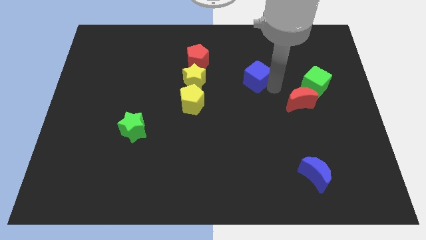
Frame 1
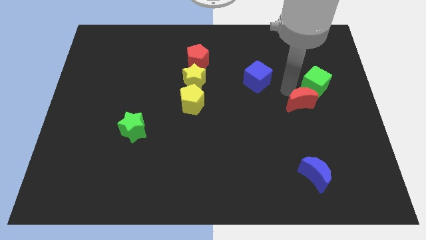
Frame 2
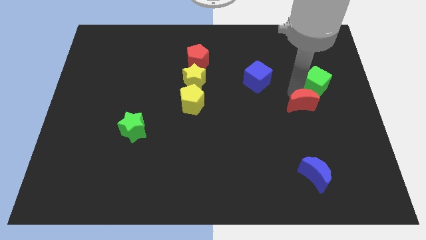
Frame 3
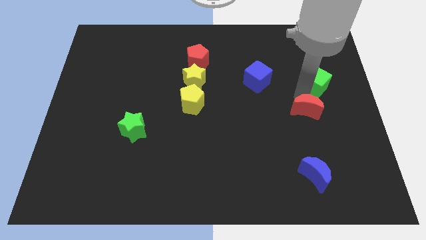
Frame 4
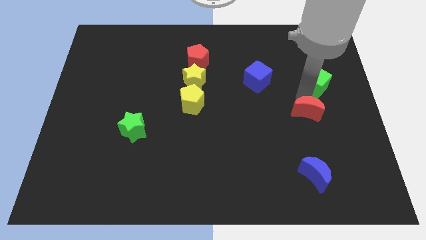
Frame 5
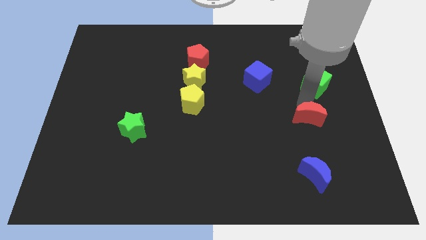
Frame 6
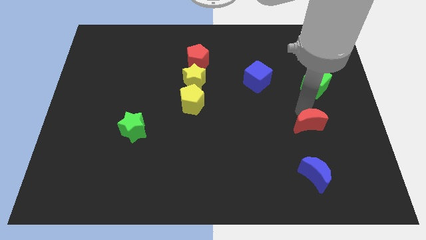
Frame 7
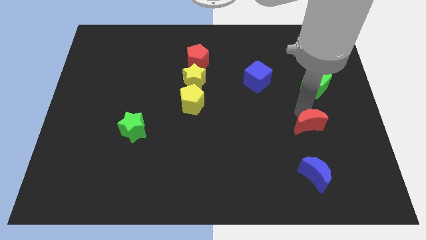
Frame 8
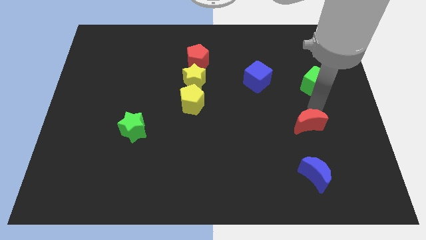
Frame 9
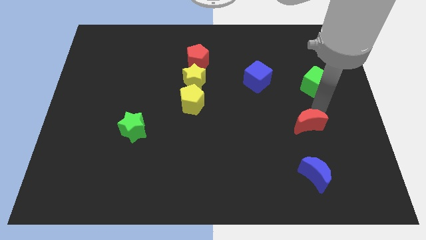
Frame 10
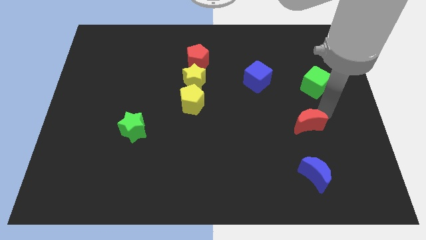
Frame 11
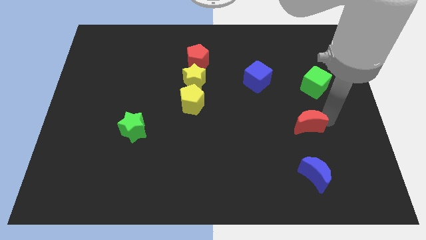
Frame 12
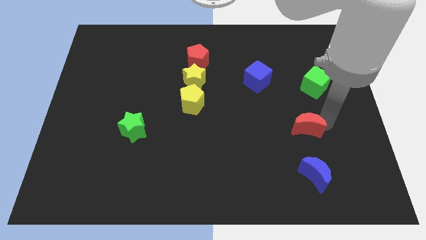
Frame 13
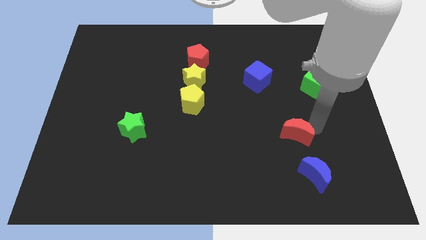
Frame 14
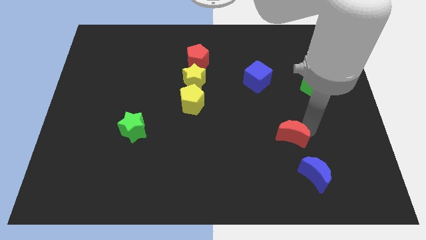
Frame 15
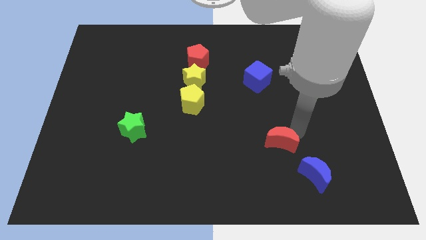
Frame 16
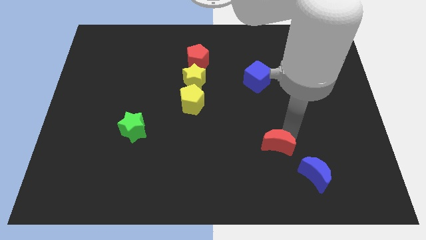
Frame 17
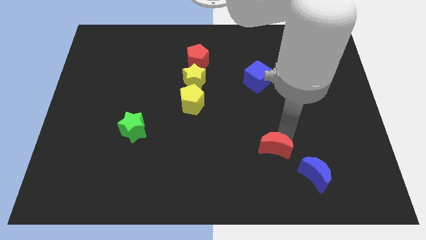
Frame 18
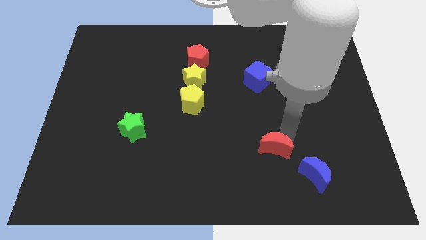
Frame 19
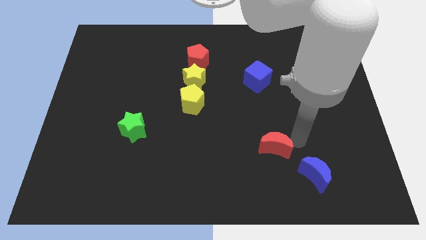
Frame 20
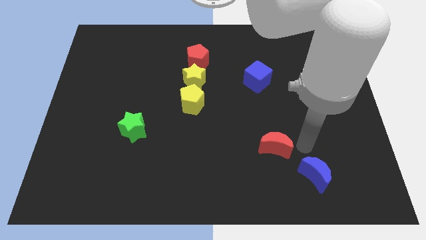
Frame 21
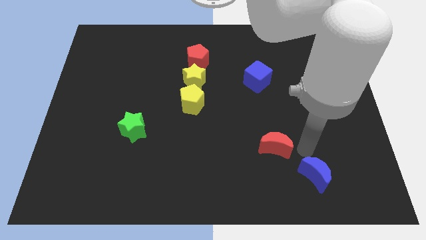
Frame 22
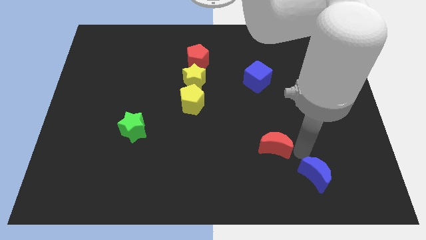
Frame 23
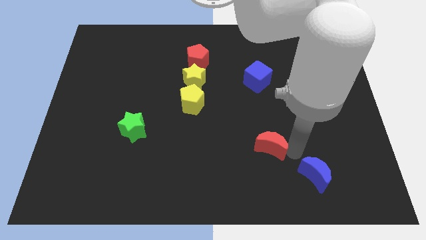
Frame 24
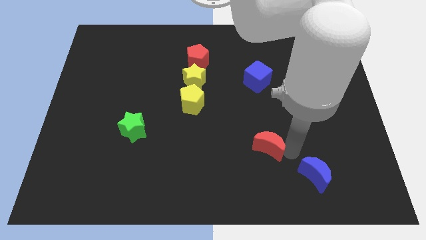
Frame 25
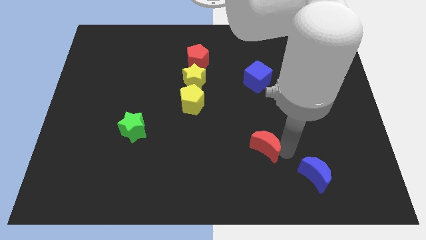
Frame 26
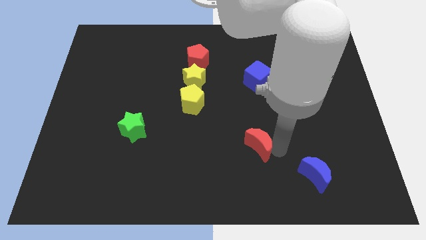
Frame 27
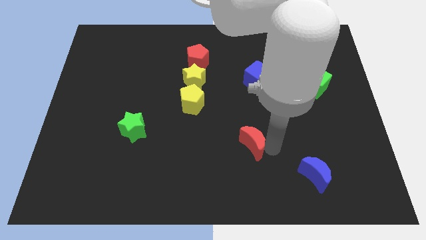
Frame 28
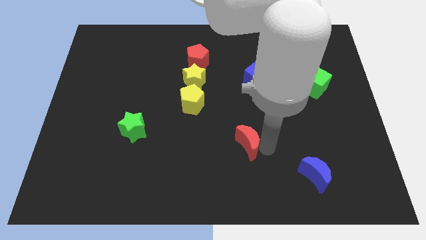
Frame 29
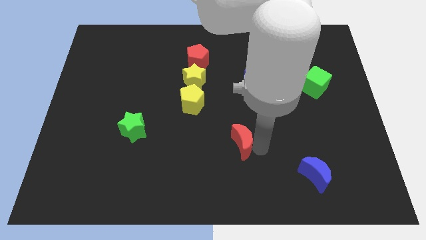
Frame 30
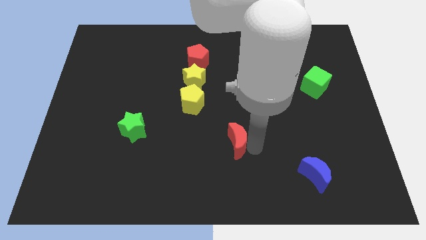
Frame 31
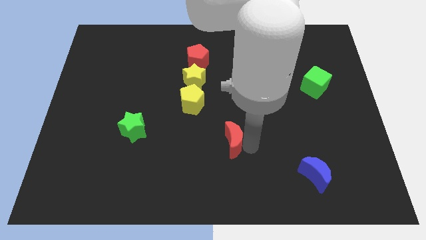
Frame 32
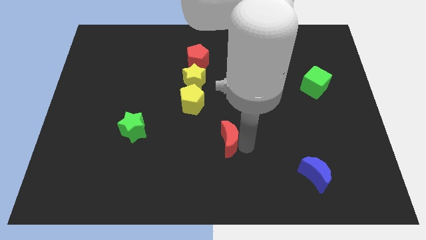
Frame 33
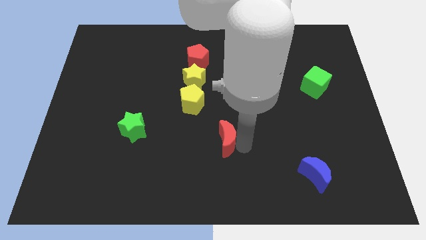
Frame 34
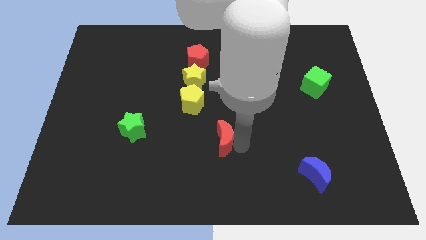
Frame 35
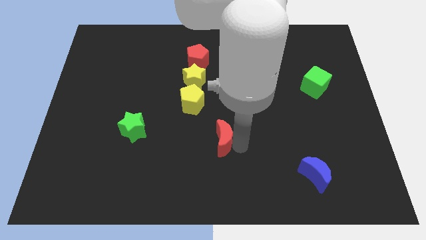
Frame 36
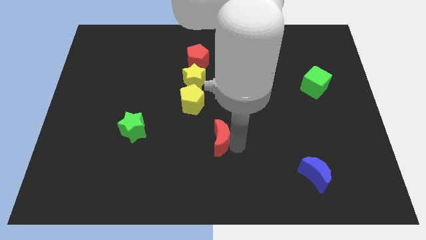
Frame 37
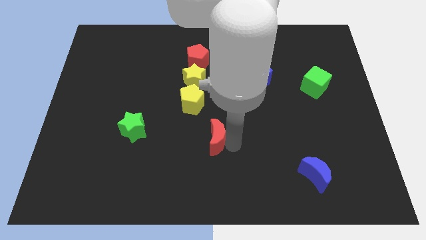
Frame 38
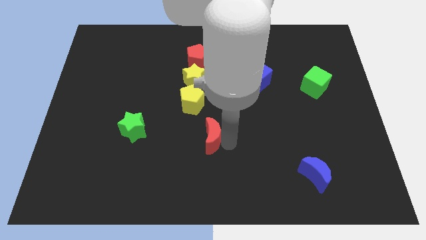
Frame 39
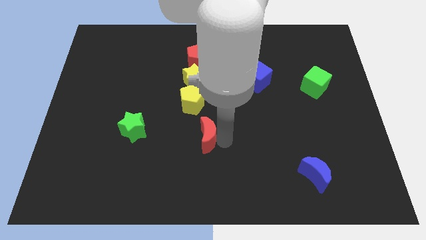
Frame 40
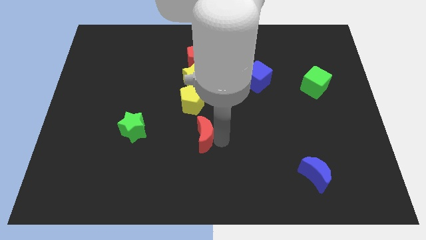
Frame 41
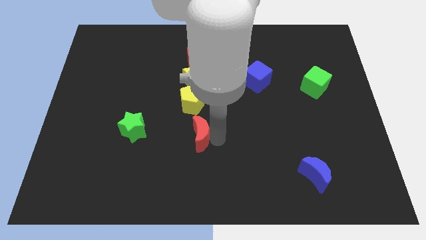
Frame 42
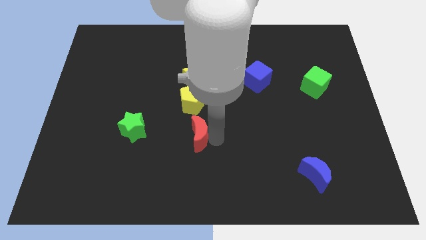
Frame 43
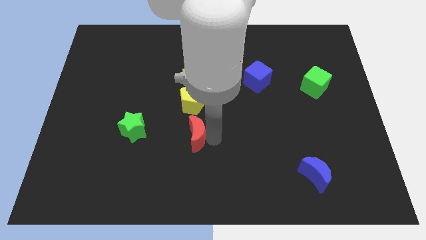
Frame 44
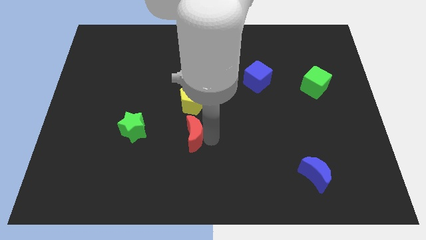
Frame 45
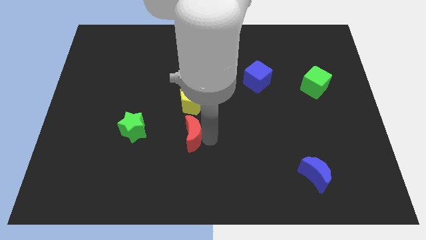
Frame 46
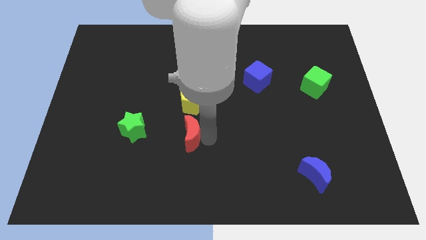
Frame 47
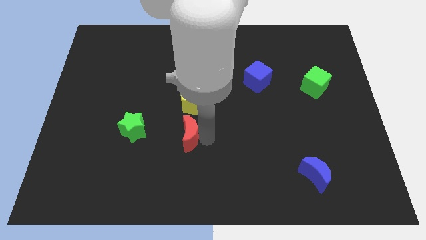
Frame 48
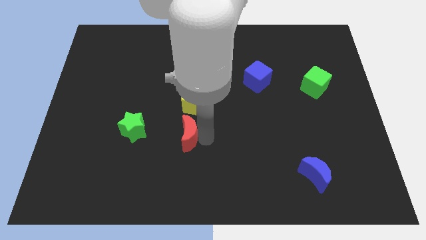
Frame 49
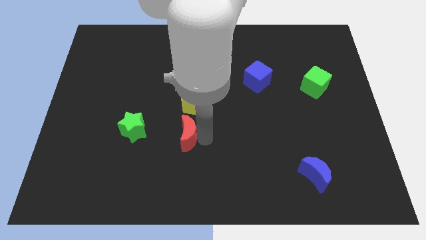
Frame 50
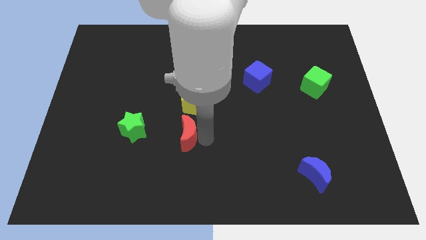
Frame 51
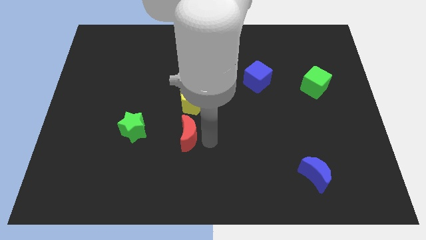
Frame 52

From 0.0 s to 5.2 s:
push the red moon to the bottom side of the yellow pentagon to form a vertical line

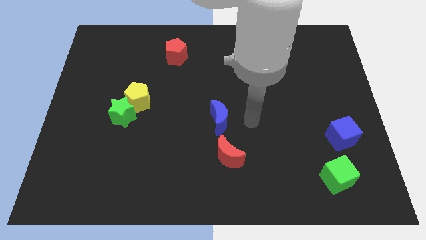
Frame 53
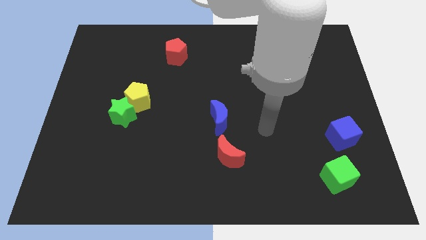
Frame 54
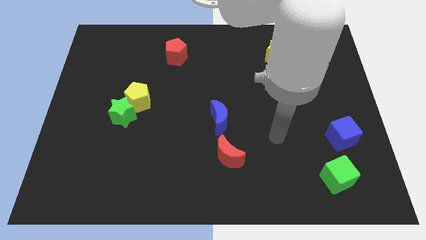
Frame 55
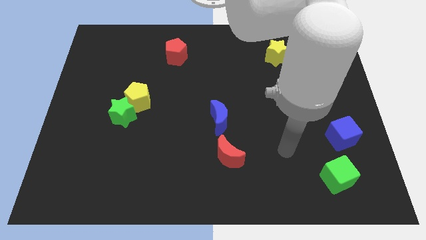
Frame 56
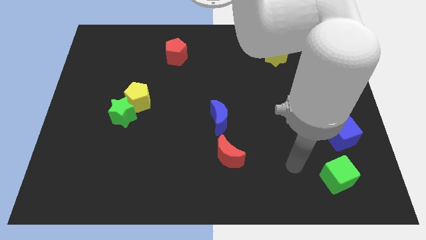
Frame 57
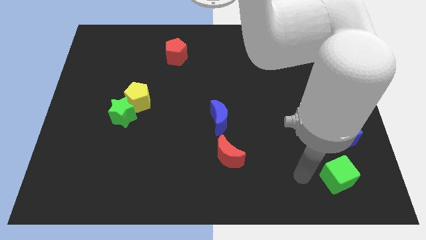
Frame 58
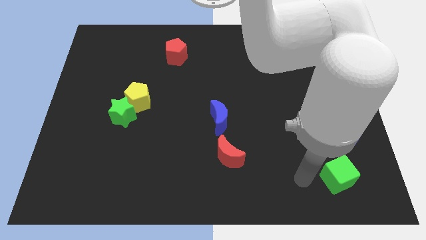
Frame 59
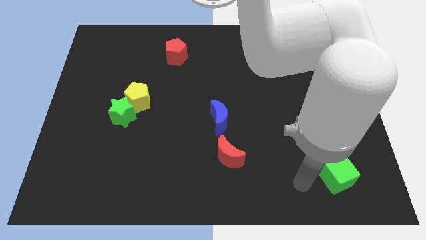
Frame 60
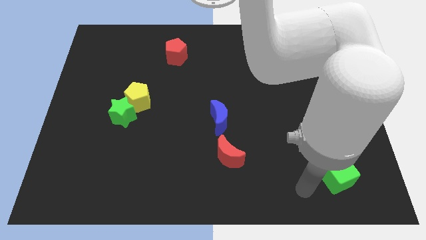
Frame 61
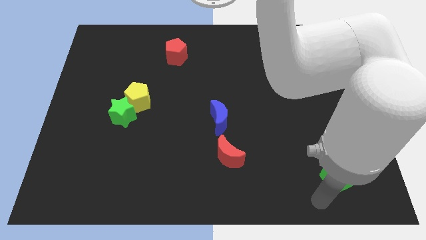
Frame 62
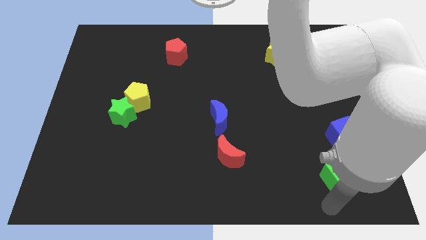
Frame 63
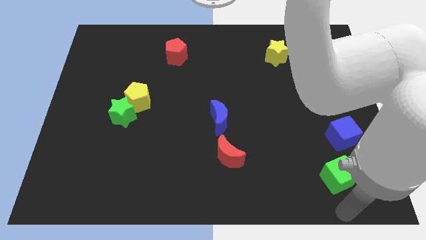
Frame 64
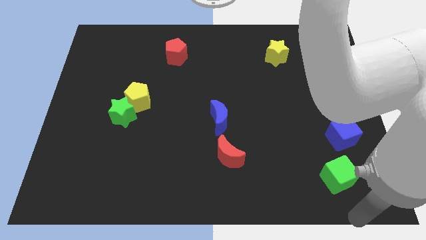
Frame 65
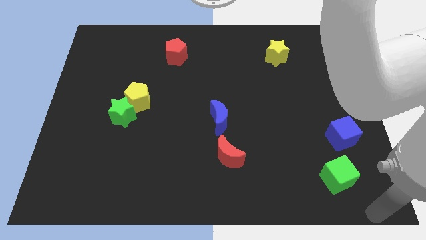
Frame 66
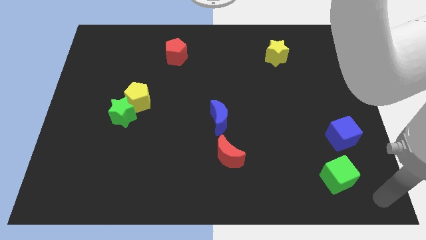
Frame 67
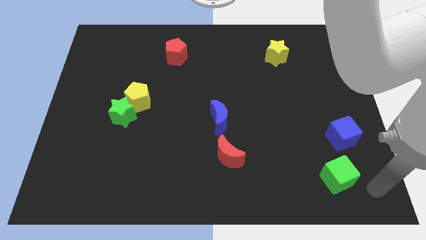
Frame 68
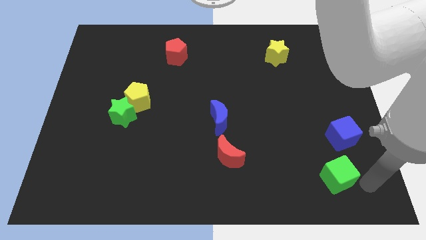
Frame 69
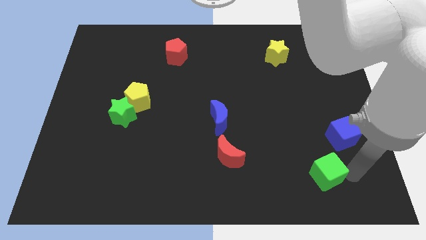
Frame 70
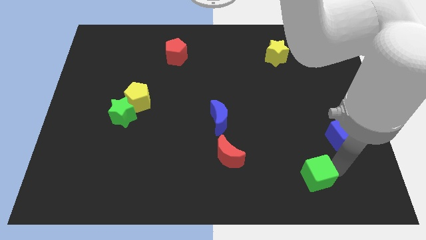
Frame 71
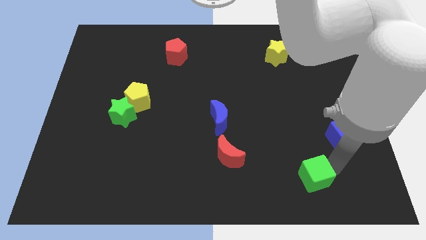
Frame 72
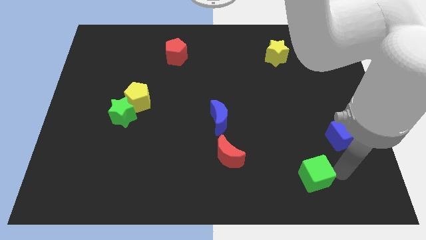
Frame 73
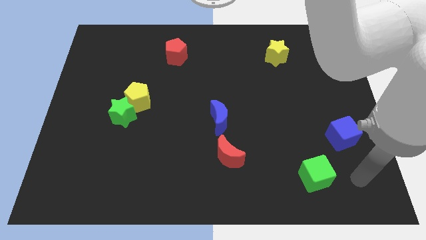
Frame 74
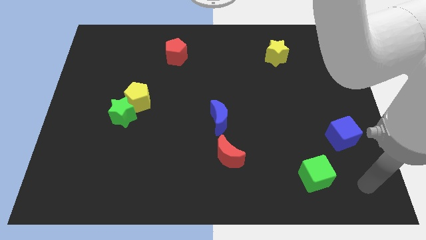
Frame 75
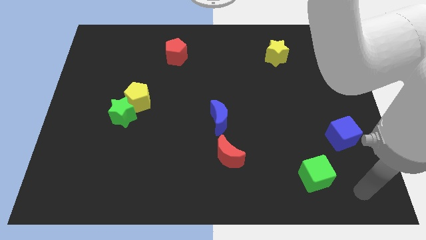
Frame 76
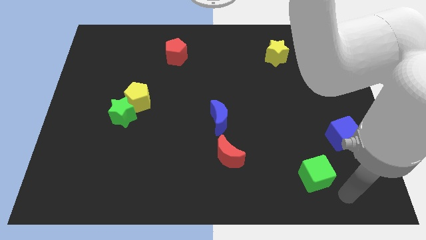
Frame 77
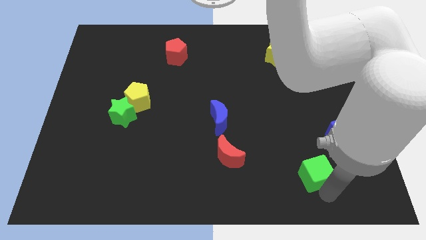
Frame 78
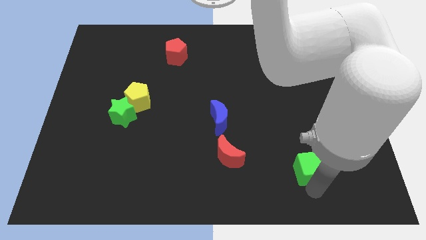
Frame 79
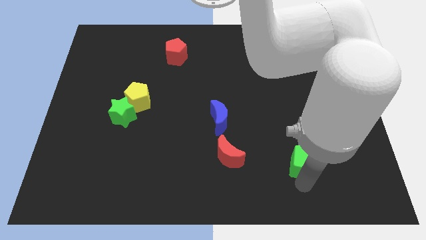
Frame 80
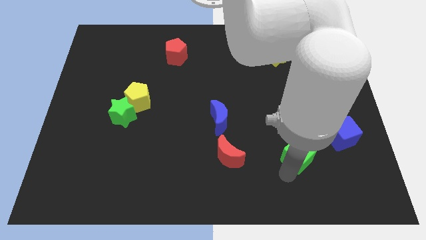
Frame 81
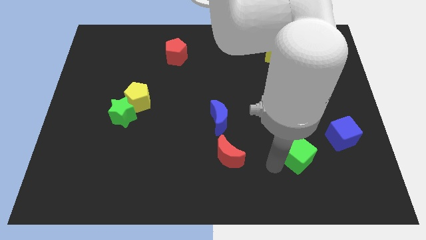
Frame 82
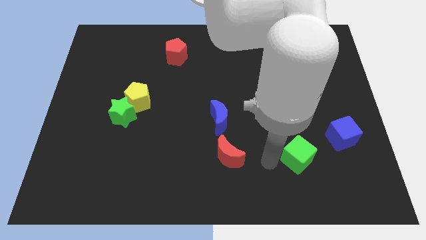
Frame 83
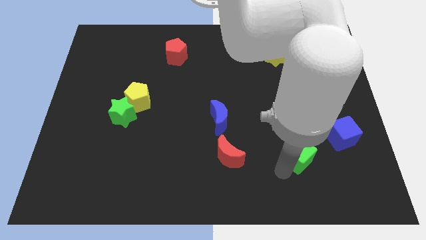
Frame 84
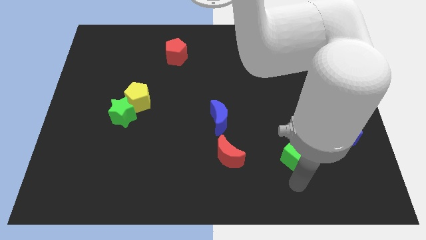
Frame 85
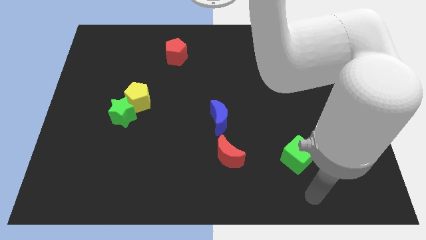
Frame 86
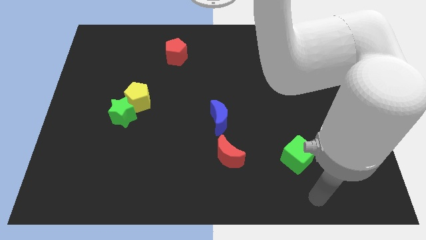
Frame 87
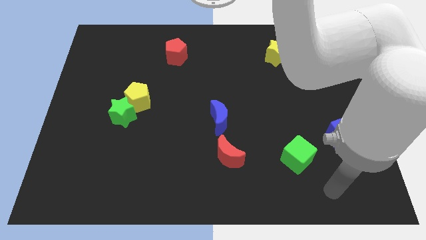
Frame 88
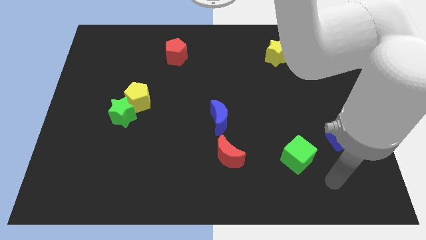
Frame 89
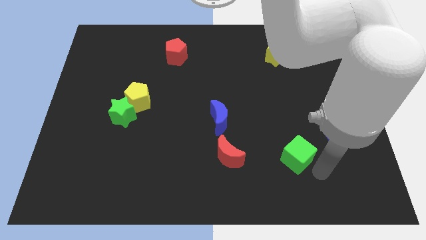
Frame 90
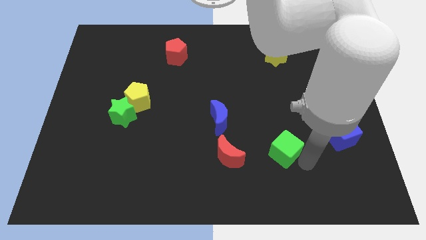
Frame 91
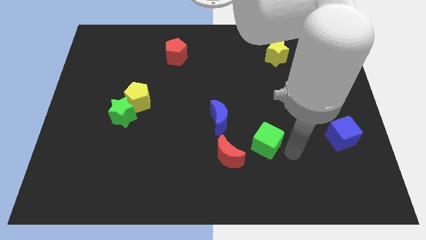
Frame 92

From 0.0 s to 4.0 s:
push the green cube towards the blue moon
